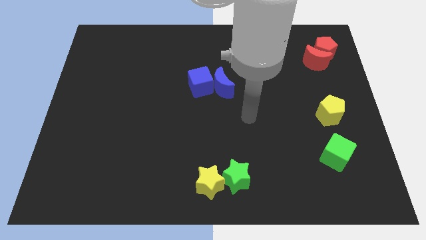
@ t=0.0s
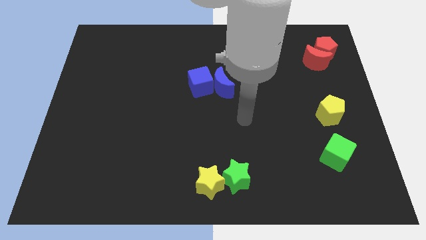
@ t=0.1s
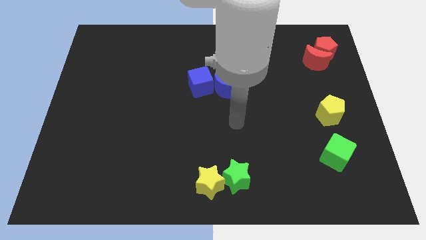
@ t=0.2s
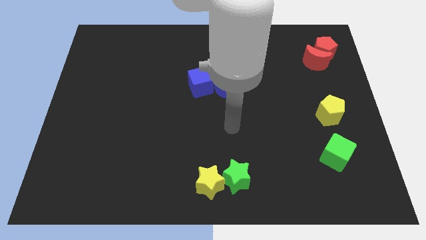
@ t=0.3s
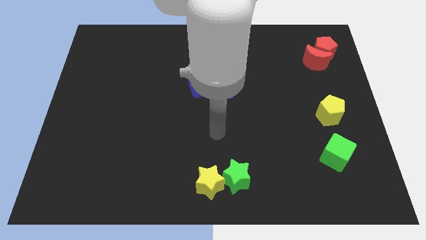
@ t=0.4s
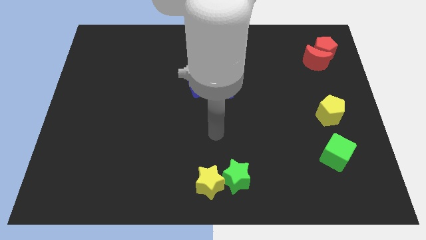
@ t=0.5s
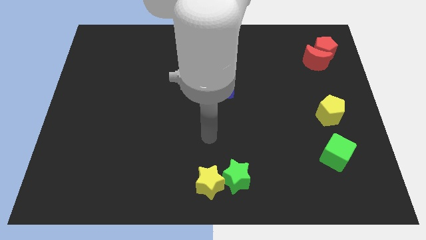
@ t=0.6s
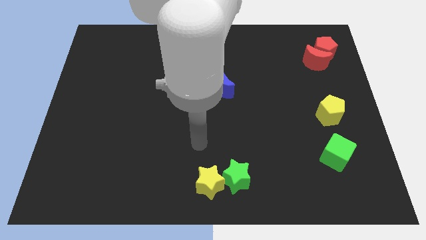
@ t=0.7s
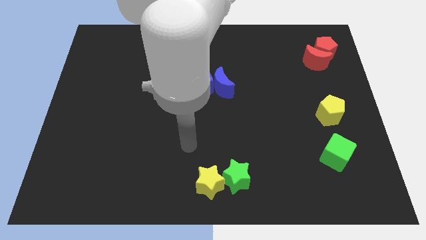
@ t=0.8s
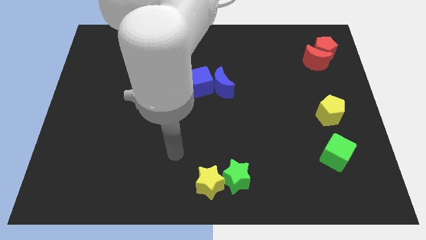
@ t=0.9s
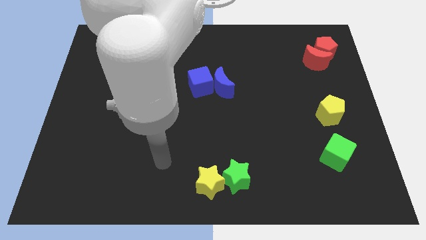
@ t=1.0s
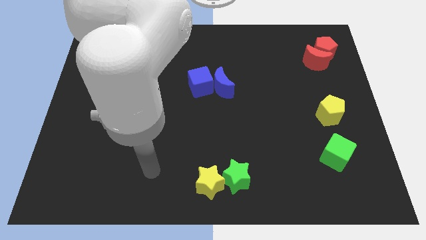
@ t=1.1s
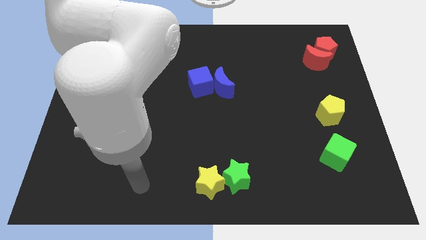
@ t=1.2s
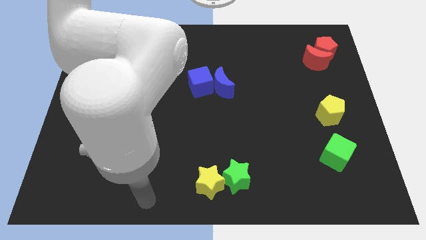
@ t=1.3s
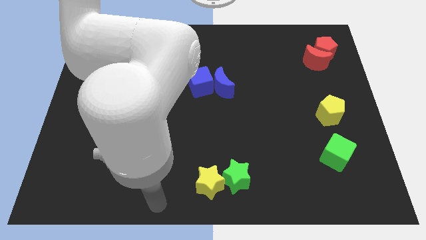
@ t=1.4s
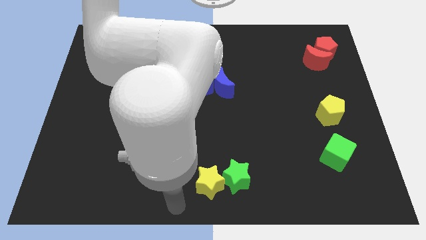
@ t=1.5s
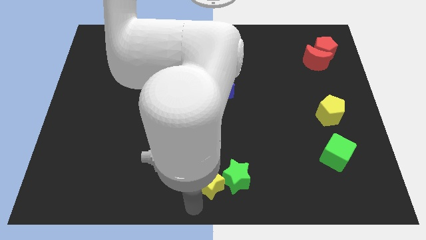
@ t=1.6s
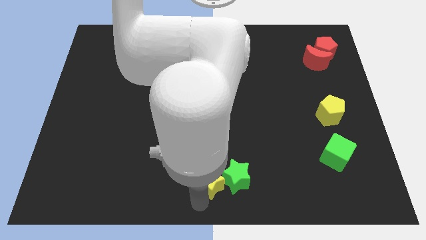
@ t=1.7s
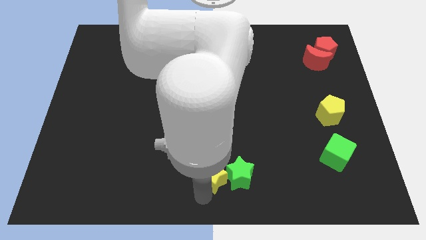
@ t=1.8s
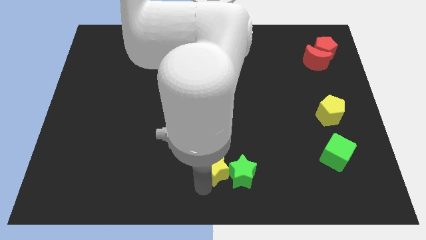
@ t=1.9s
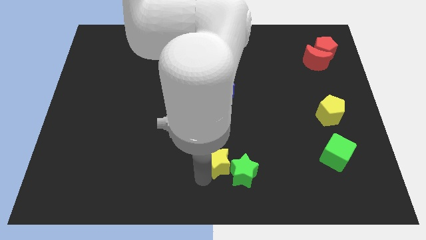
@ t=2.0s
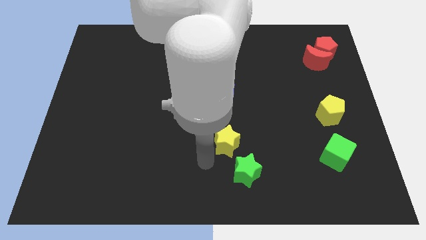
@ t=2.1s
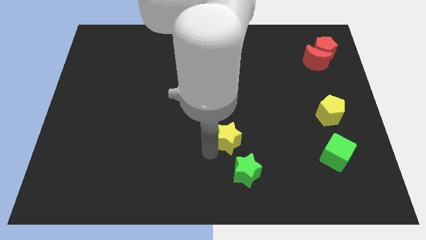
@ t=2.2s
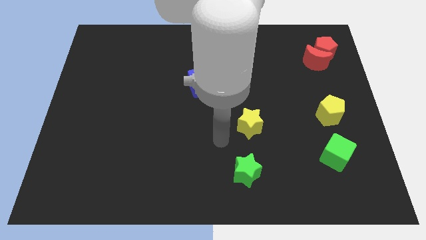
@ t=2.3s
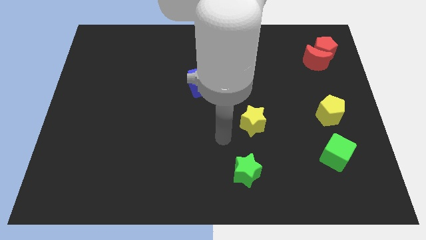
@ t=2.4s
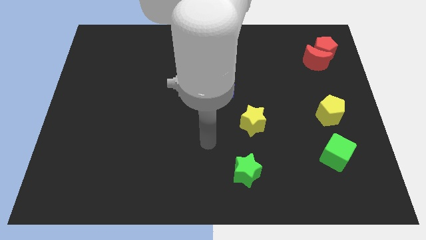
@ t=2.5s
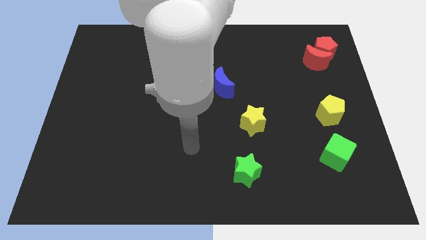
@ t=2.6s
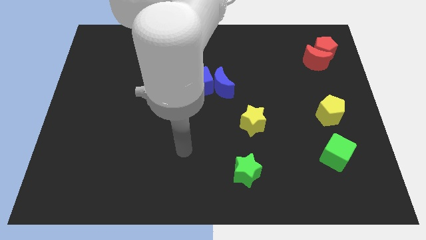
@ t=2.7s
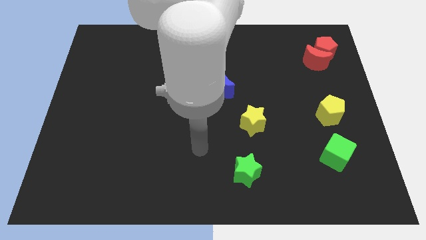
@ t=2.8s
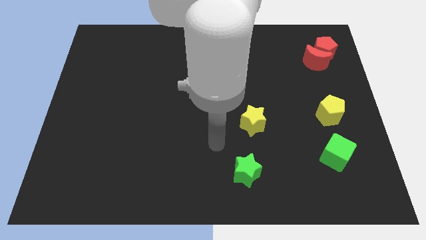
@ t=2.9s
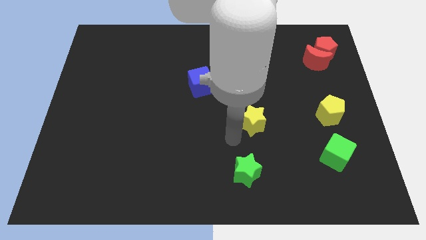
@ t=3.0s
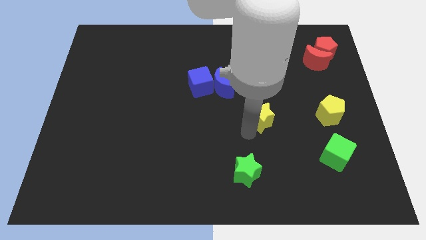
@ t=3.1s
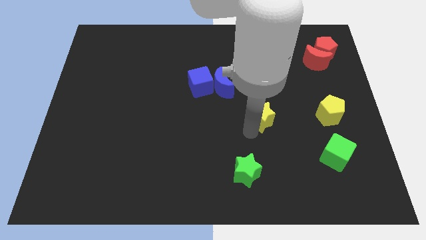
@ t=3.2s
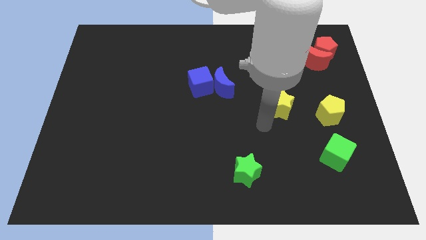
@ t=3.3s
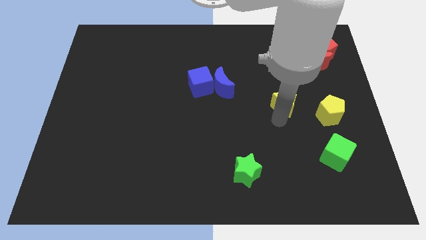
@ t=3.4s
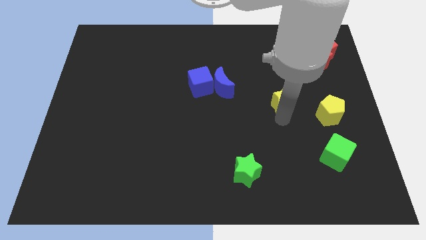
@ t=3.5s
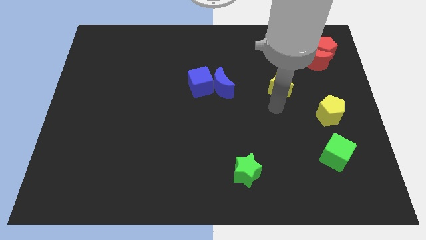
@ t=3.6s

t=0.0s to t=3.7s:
separate the yellow star from the green star

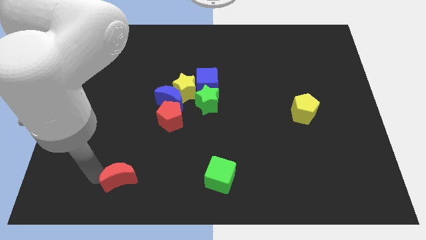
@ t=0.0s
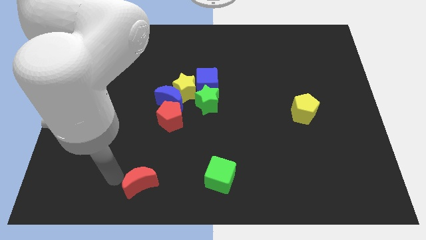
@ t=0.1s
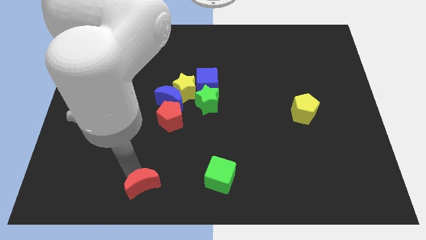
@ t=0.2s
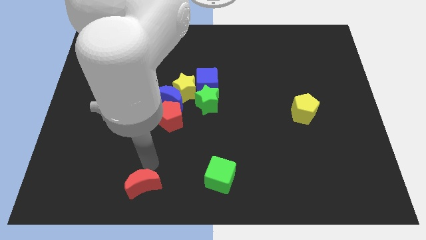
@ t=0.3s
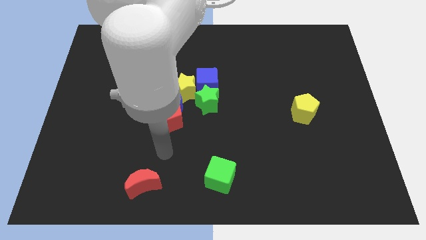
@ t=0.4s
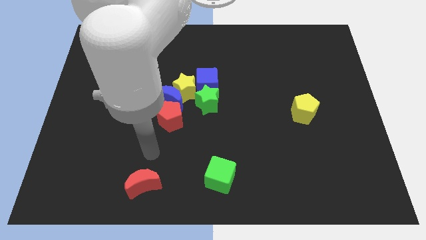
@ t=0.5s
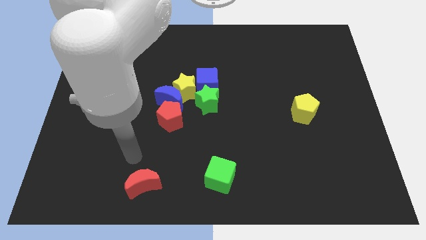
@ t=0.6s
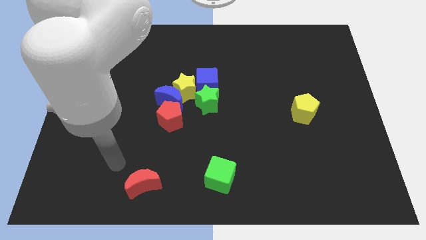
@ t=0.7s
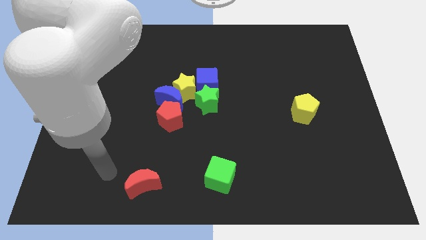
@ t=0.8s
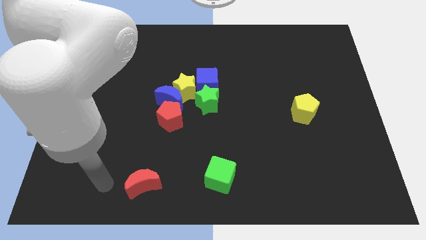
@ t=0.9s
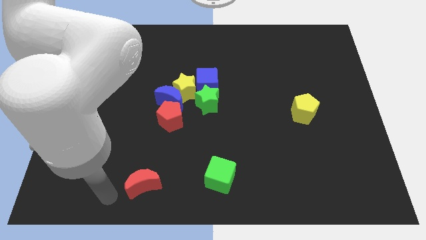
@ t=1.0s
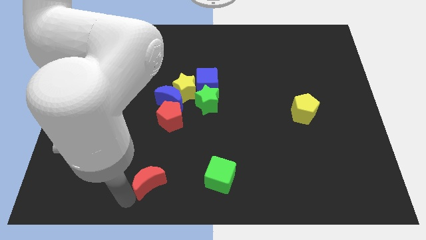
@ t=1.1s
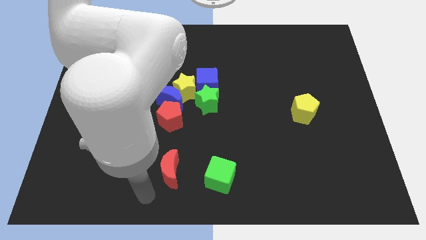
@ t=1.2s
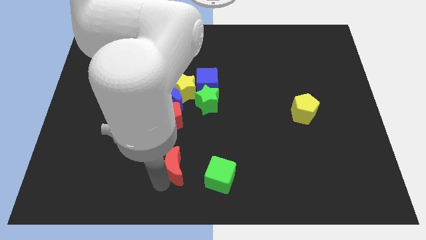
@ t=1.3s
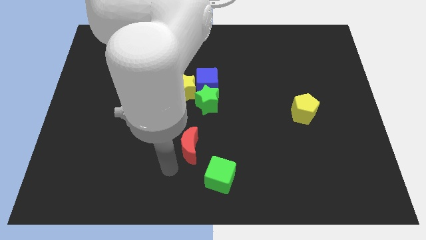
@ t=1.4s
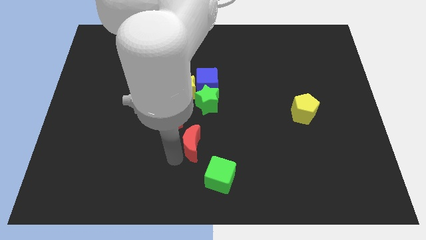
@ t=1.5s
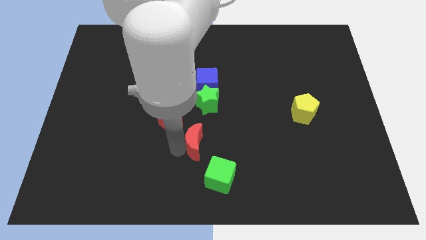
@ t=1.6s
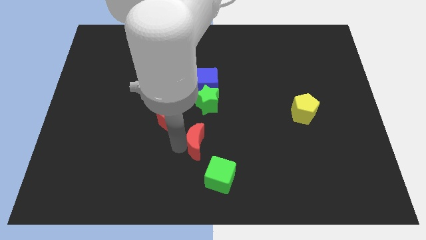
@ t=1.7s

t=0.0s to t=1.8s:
place red crescent below red pentagon

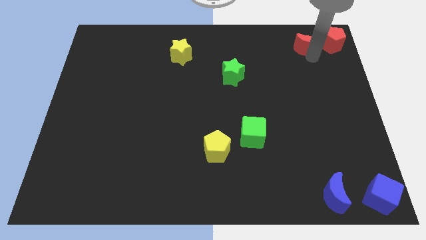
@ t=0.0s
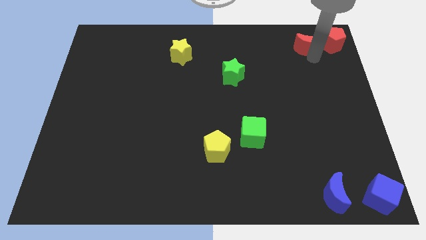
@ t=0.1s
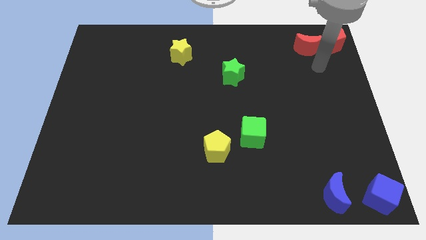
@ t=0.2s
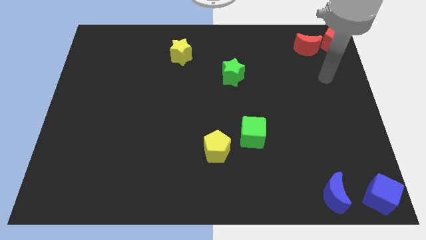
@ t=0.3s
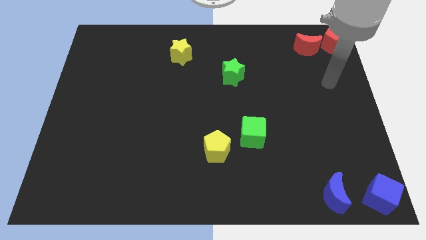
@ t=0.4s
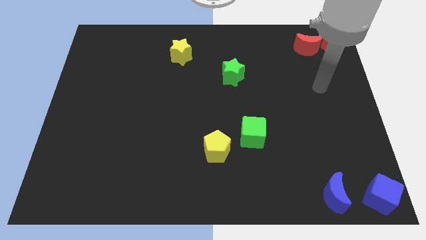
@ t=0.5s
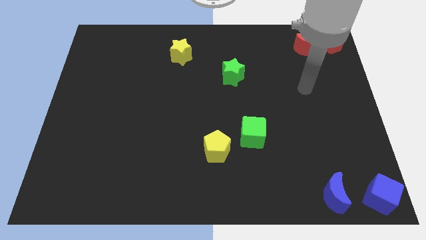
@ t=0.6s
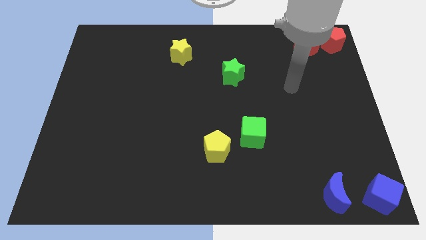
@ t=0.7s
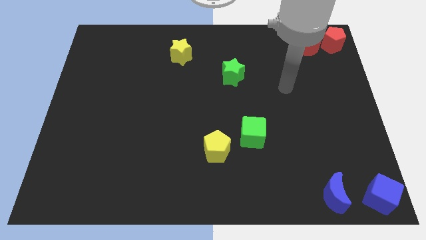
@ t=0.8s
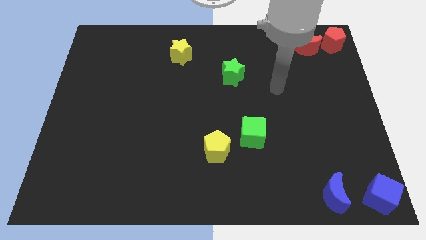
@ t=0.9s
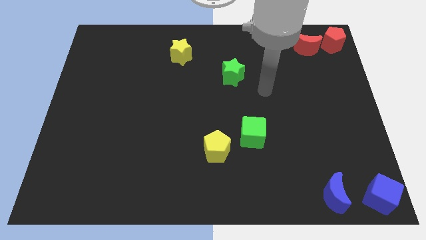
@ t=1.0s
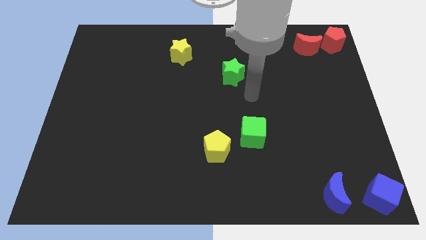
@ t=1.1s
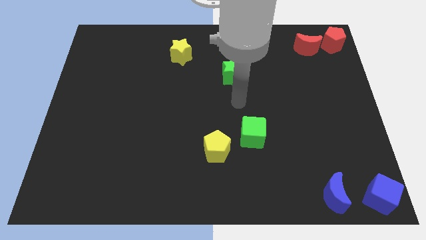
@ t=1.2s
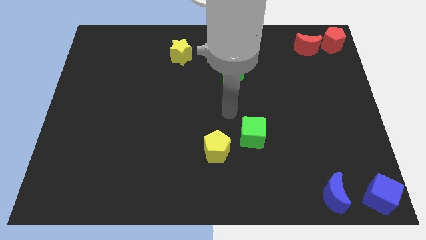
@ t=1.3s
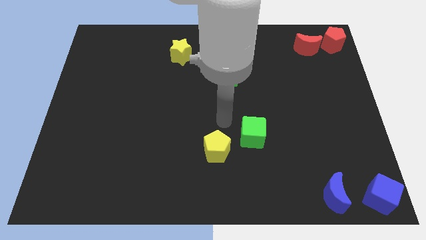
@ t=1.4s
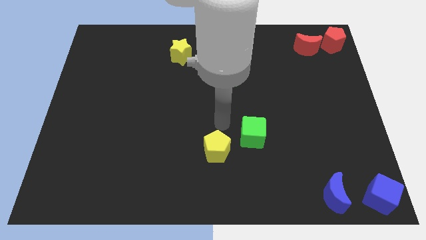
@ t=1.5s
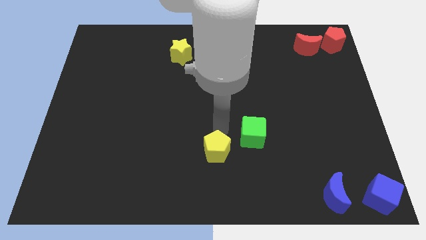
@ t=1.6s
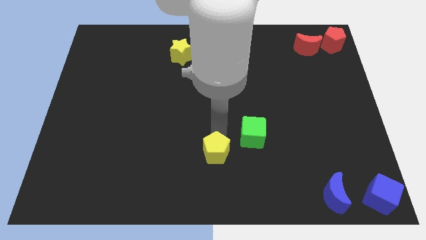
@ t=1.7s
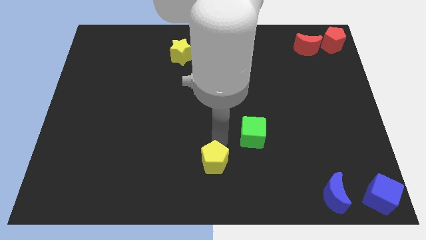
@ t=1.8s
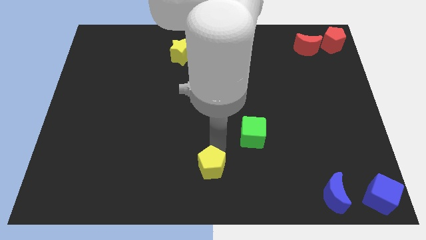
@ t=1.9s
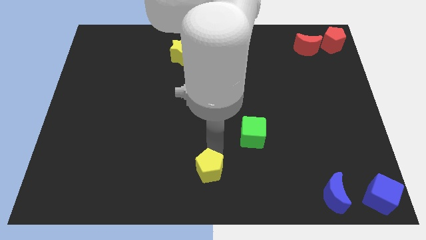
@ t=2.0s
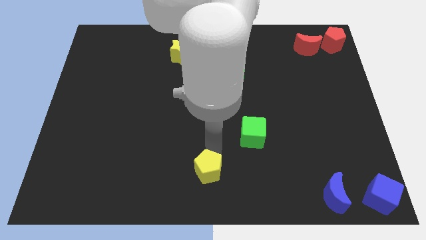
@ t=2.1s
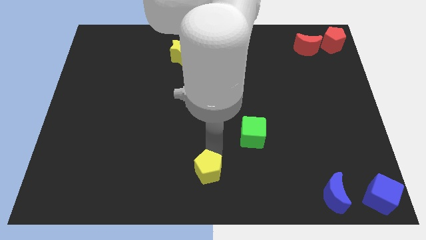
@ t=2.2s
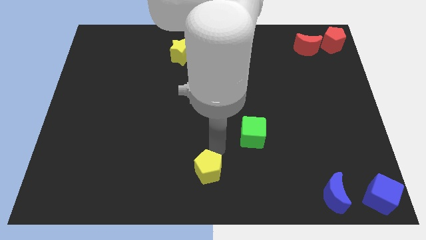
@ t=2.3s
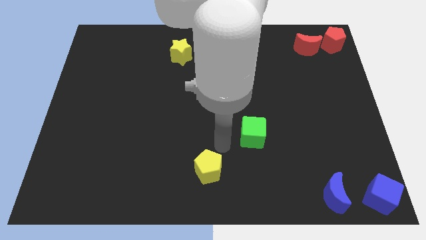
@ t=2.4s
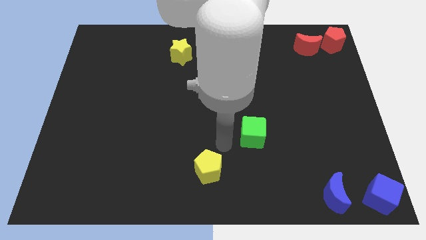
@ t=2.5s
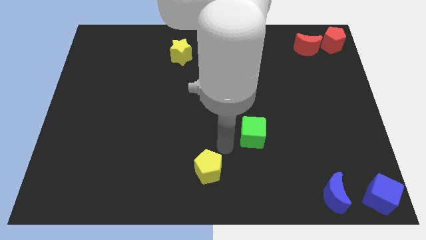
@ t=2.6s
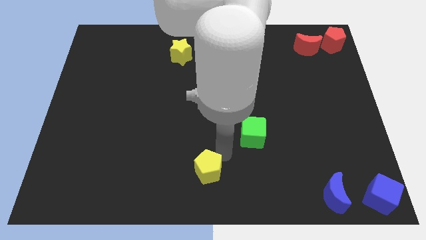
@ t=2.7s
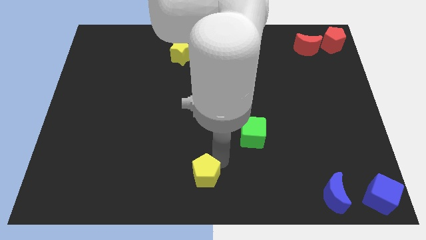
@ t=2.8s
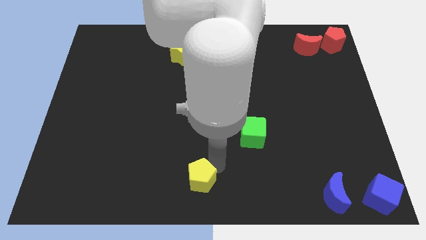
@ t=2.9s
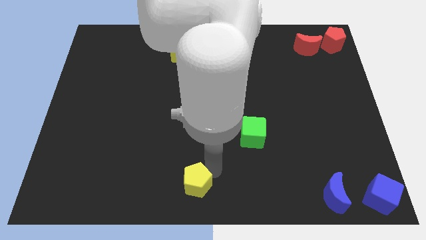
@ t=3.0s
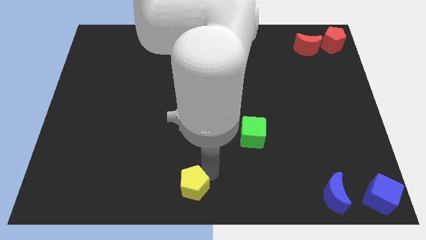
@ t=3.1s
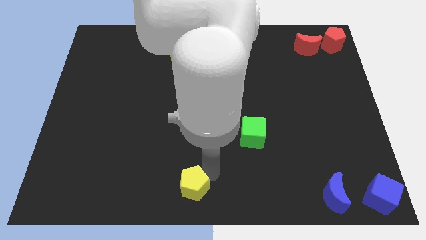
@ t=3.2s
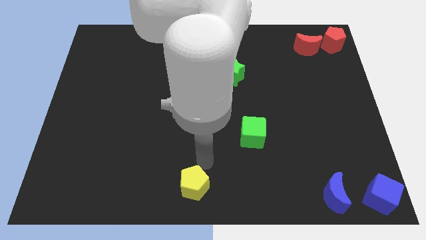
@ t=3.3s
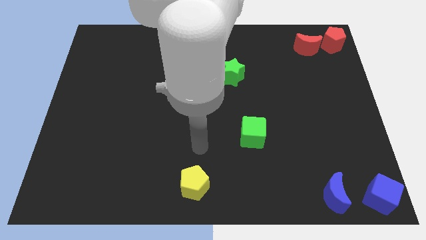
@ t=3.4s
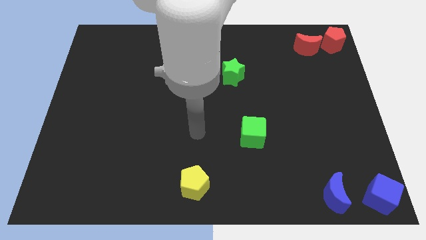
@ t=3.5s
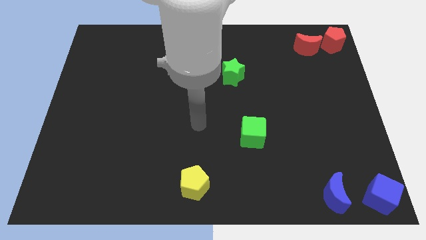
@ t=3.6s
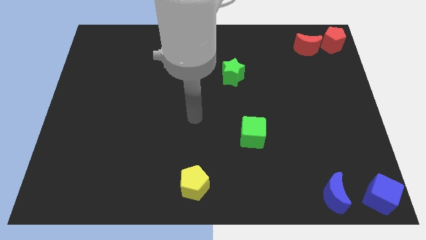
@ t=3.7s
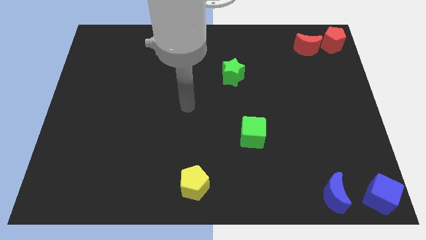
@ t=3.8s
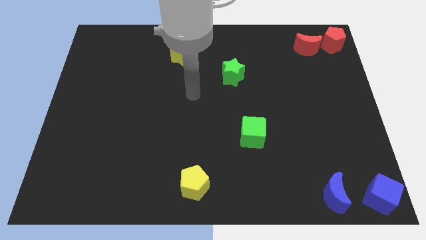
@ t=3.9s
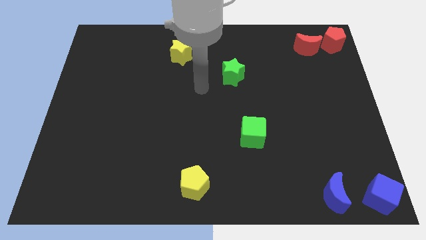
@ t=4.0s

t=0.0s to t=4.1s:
place the yellow pentagon towards bottom center
